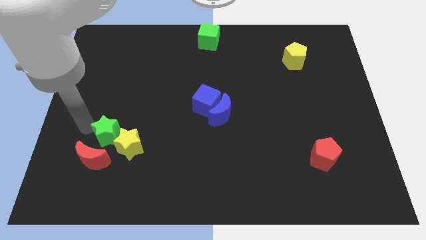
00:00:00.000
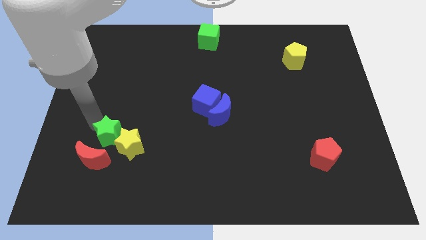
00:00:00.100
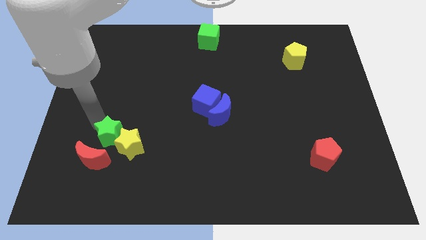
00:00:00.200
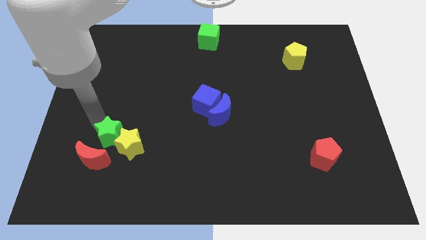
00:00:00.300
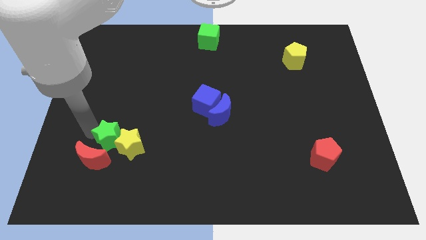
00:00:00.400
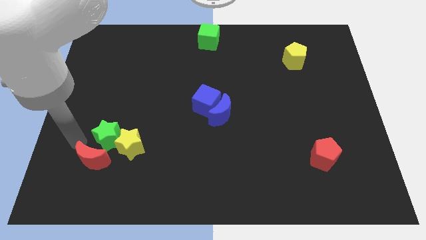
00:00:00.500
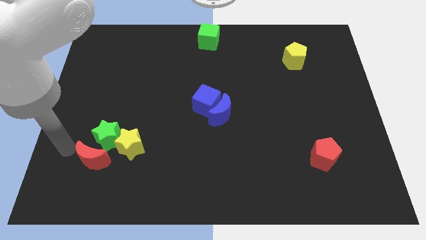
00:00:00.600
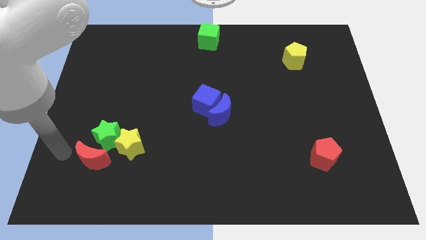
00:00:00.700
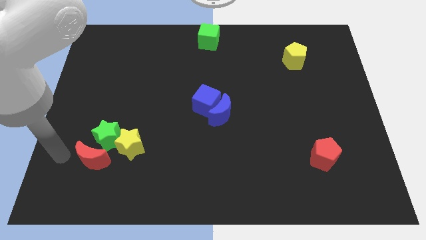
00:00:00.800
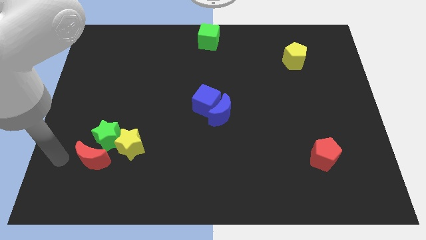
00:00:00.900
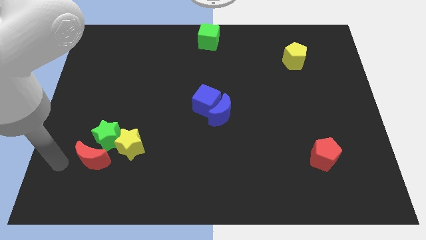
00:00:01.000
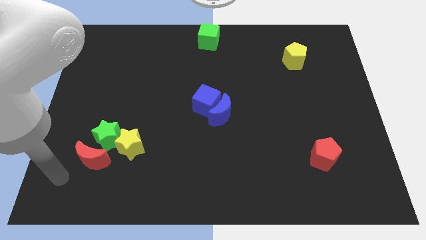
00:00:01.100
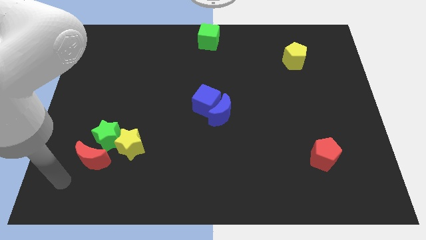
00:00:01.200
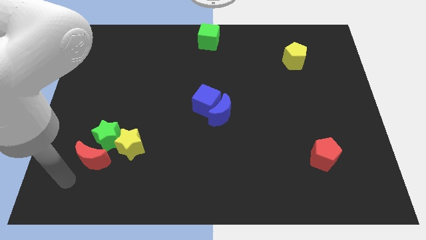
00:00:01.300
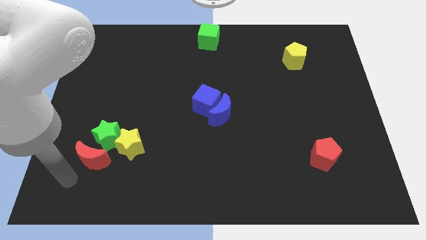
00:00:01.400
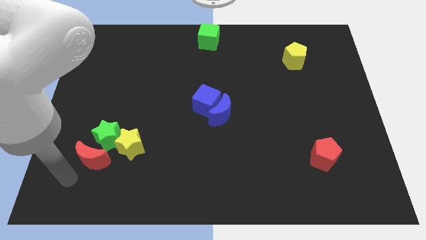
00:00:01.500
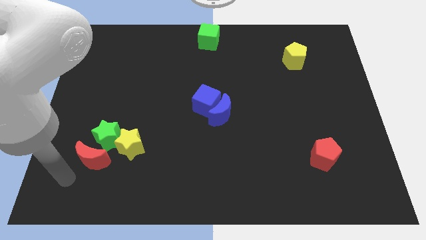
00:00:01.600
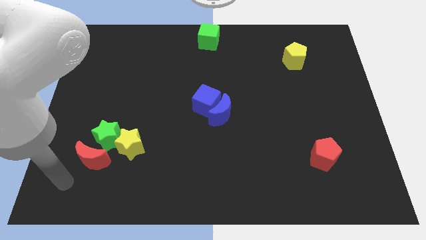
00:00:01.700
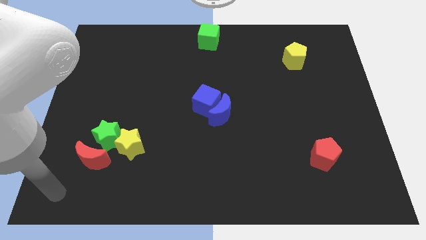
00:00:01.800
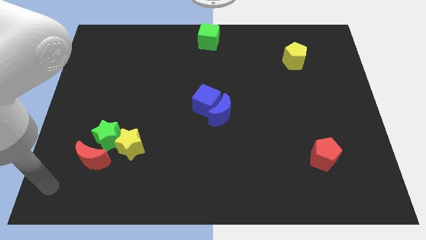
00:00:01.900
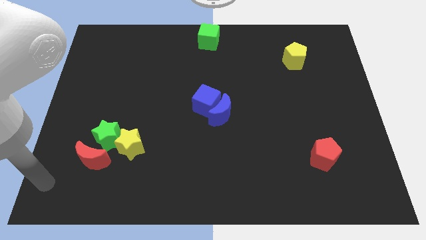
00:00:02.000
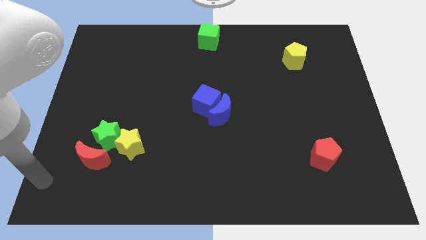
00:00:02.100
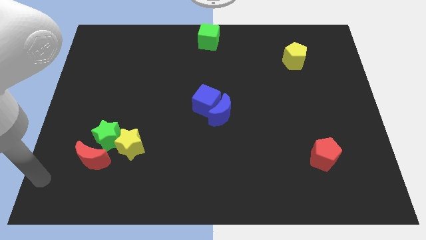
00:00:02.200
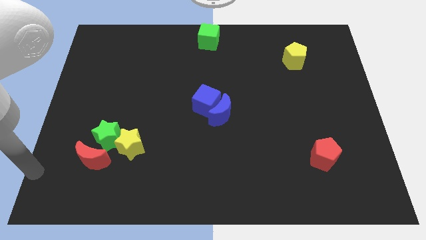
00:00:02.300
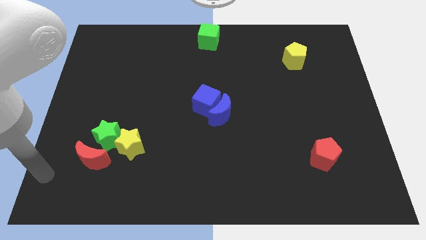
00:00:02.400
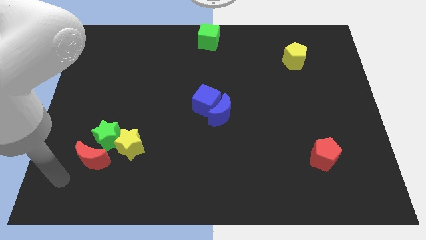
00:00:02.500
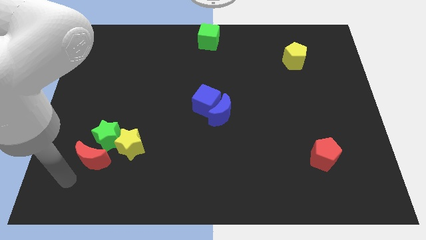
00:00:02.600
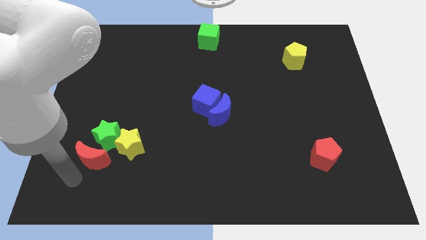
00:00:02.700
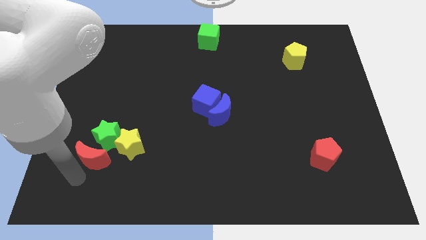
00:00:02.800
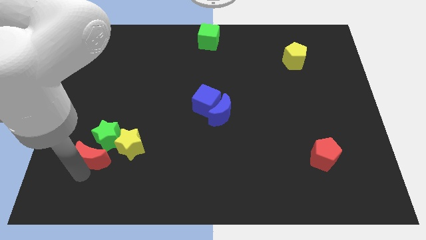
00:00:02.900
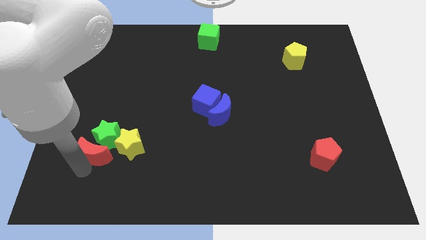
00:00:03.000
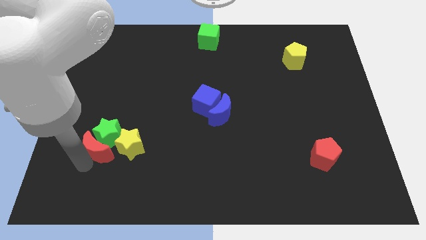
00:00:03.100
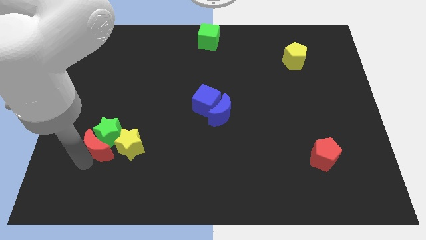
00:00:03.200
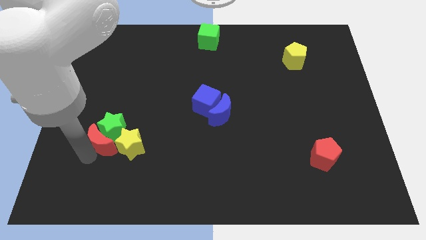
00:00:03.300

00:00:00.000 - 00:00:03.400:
push the red moon into the green star

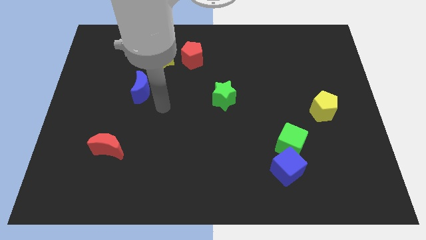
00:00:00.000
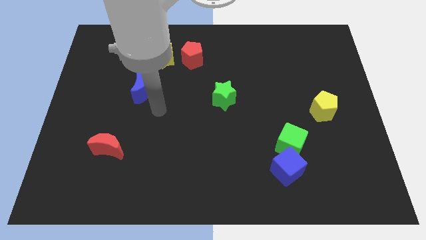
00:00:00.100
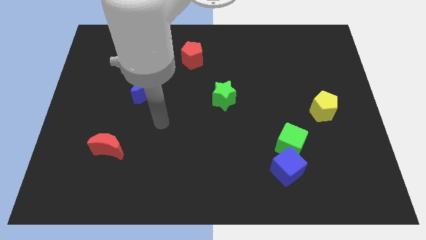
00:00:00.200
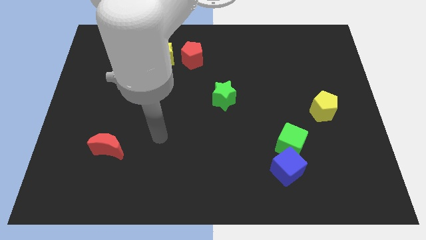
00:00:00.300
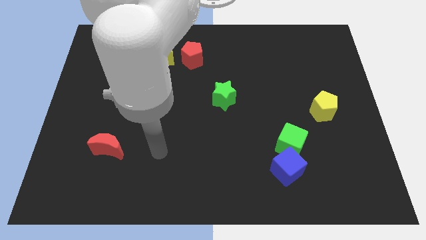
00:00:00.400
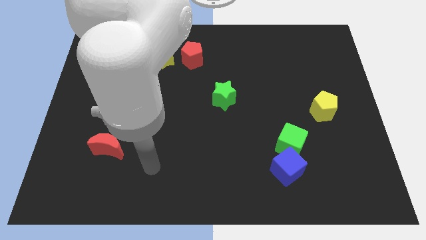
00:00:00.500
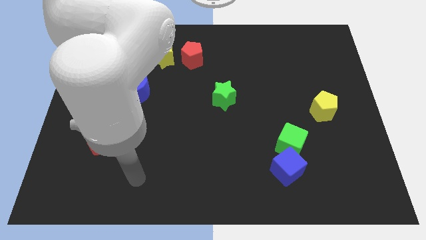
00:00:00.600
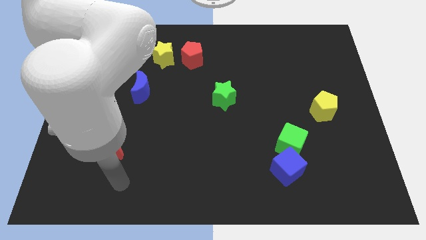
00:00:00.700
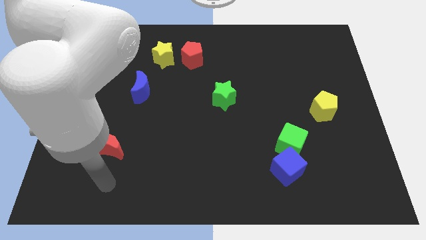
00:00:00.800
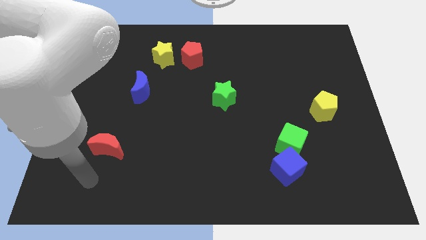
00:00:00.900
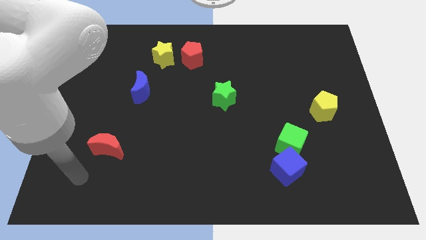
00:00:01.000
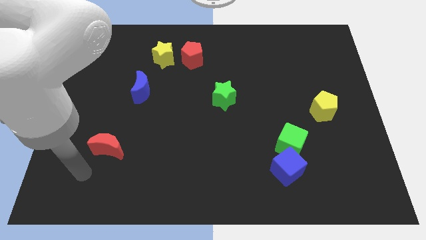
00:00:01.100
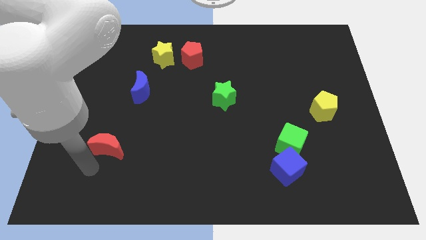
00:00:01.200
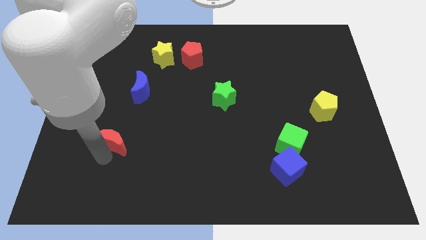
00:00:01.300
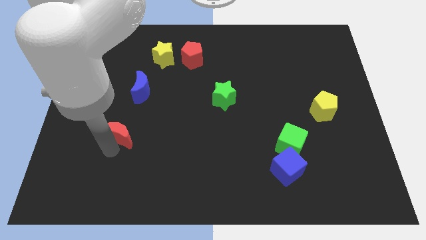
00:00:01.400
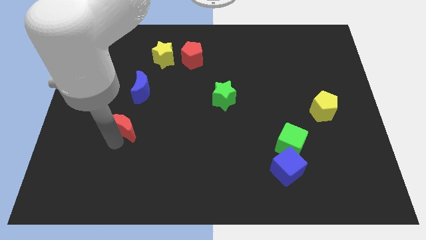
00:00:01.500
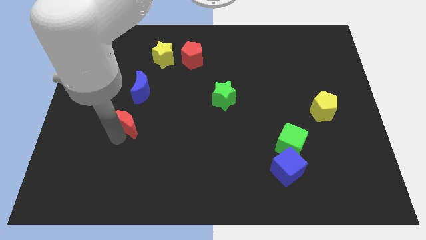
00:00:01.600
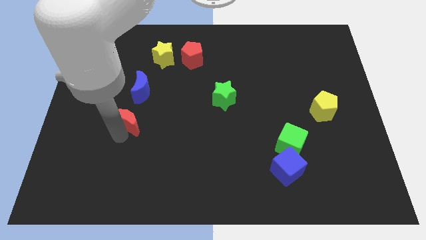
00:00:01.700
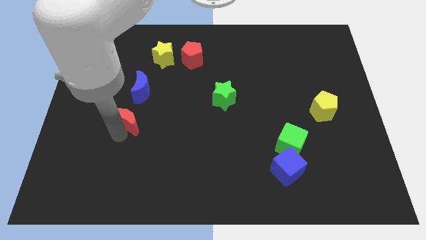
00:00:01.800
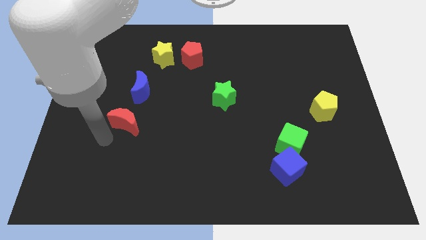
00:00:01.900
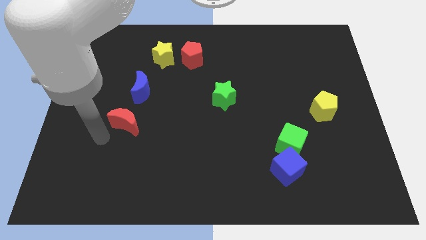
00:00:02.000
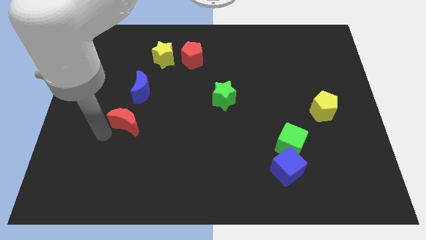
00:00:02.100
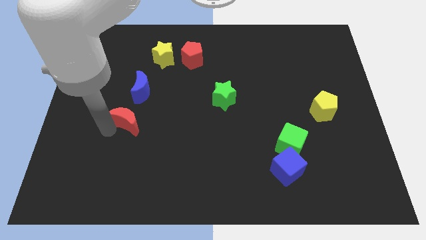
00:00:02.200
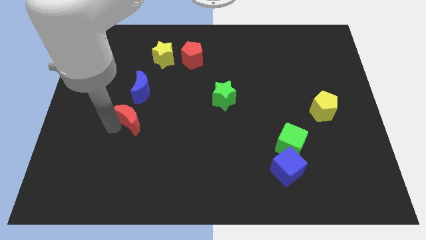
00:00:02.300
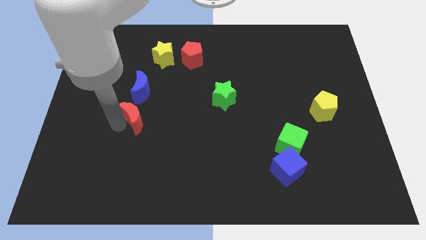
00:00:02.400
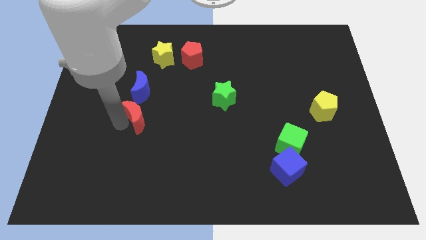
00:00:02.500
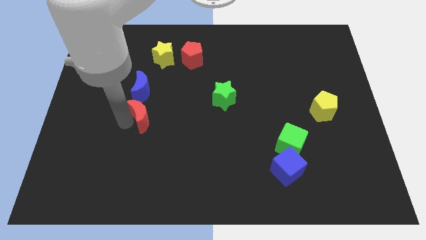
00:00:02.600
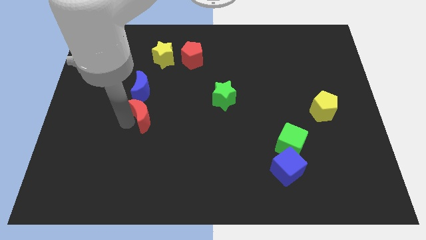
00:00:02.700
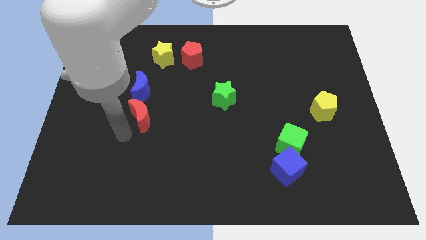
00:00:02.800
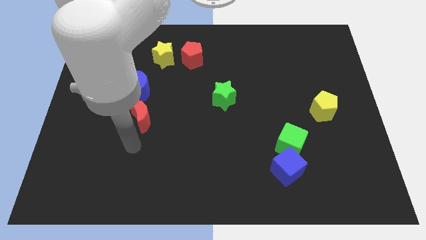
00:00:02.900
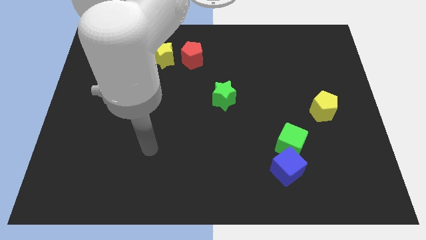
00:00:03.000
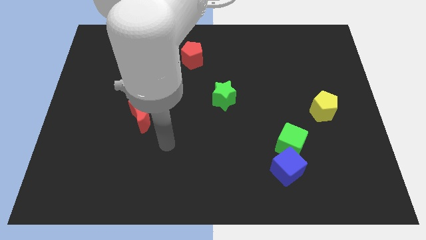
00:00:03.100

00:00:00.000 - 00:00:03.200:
place the red crescent below the blue crescent

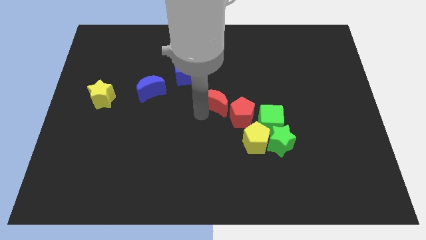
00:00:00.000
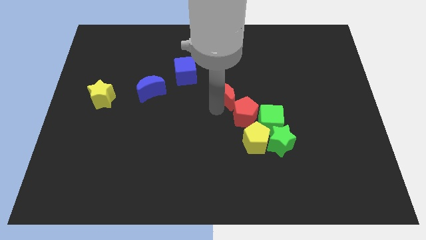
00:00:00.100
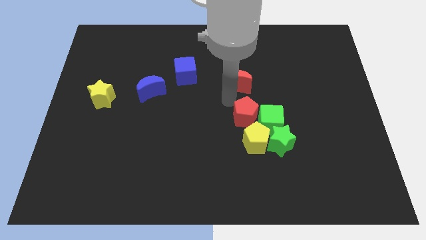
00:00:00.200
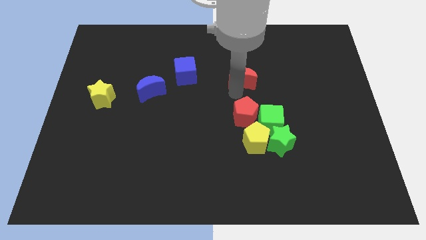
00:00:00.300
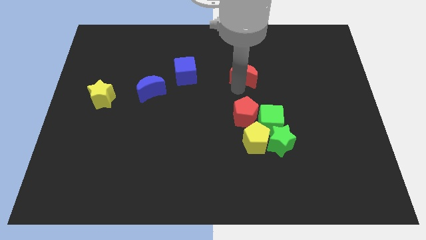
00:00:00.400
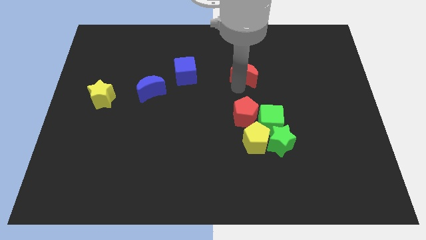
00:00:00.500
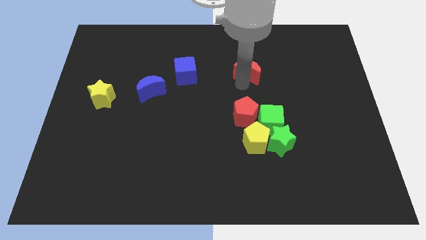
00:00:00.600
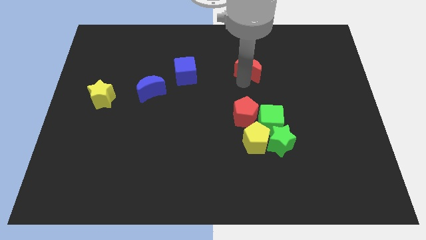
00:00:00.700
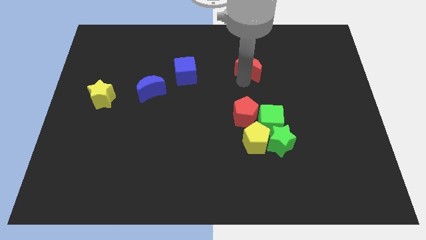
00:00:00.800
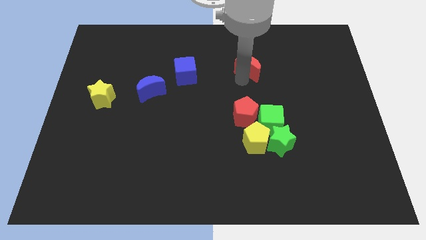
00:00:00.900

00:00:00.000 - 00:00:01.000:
place the red moon parallel to blue cube

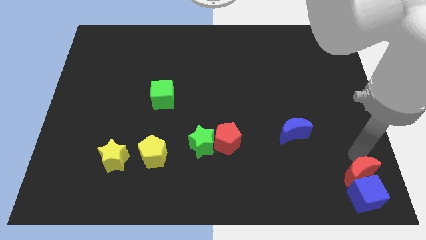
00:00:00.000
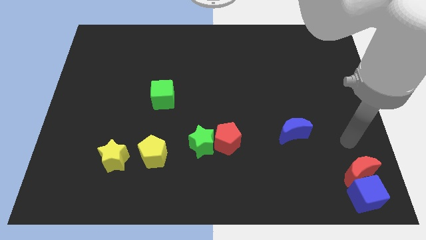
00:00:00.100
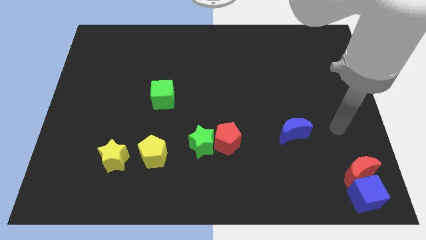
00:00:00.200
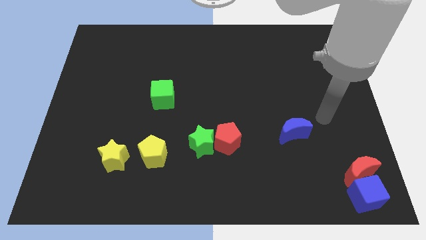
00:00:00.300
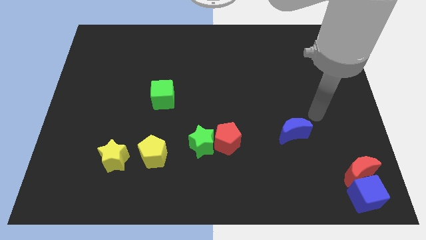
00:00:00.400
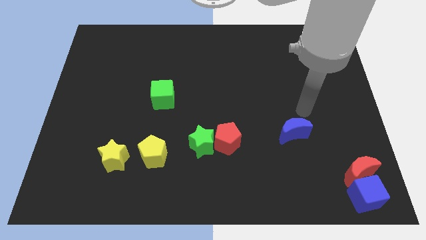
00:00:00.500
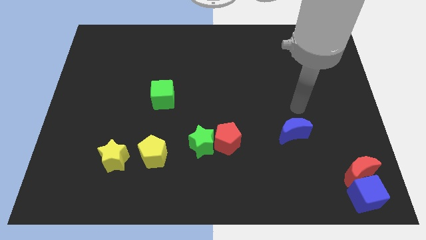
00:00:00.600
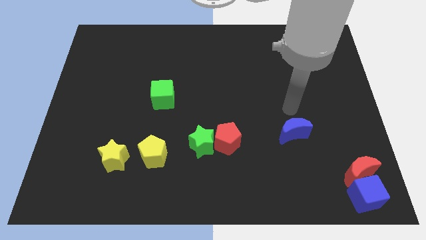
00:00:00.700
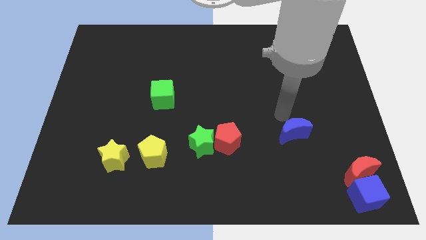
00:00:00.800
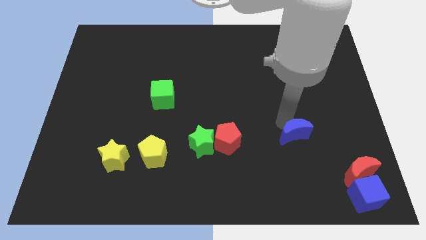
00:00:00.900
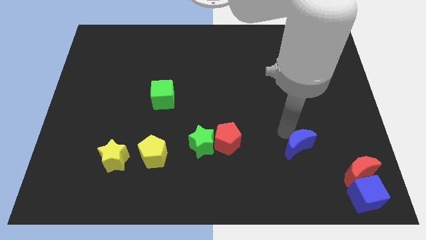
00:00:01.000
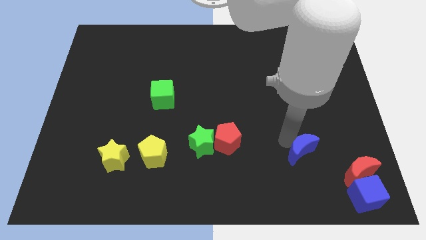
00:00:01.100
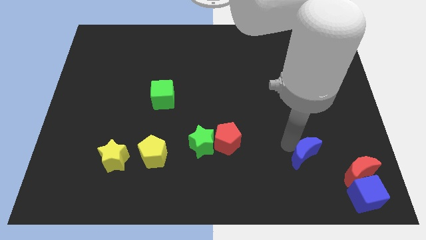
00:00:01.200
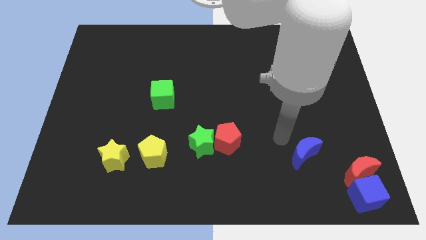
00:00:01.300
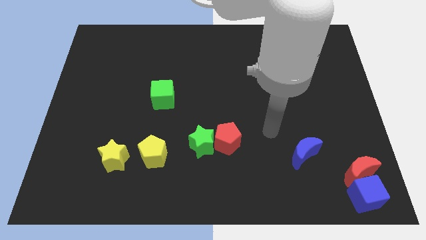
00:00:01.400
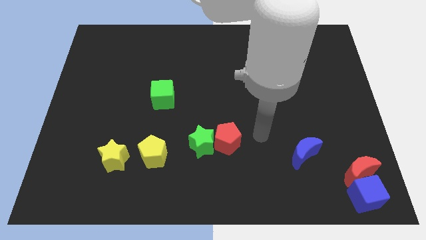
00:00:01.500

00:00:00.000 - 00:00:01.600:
move the blue crescent slightly to the bottom
